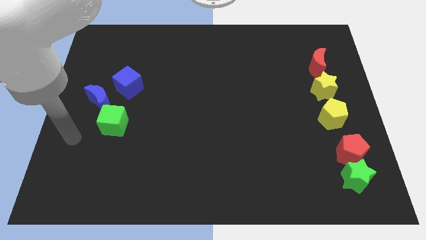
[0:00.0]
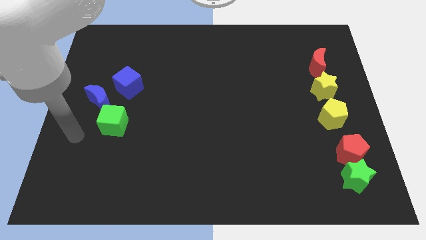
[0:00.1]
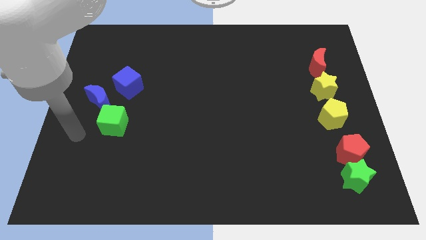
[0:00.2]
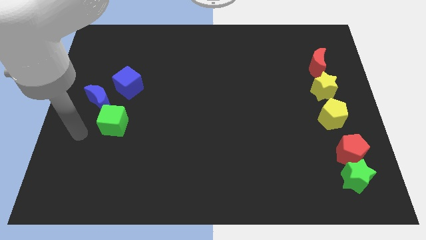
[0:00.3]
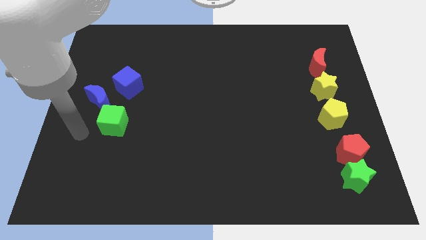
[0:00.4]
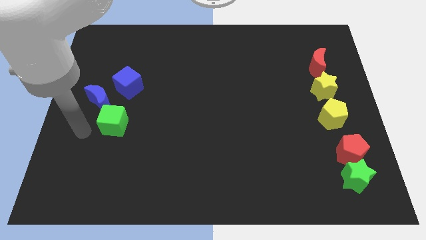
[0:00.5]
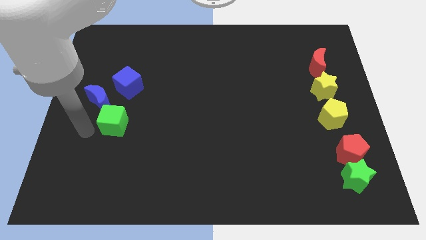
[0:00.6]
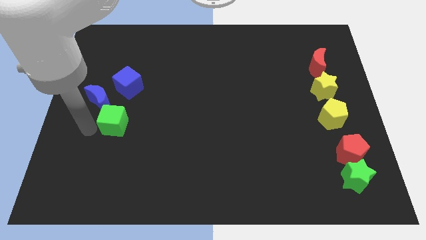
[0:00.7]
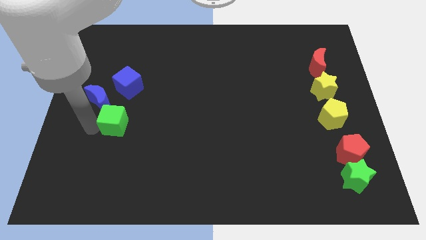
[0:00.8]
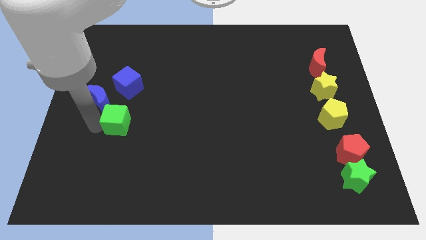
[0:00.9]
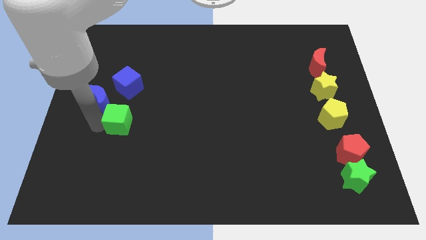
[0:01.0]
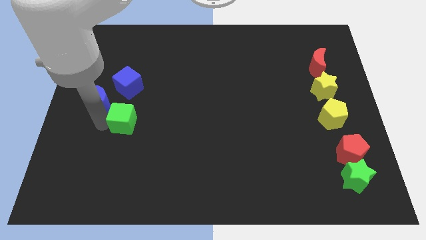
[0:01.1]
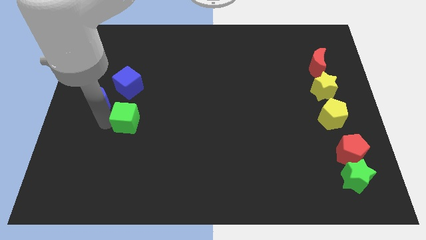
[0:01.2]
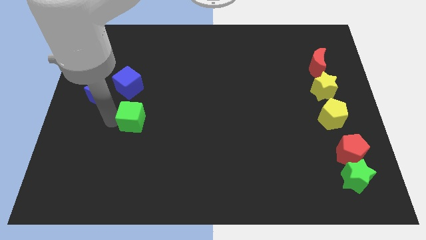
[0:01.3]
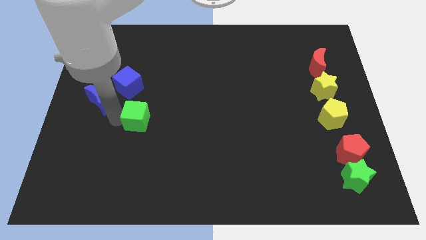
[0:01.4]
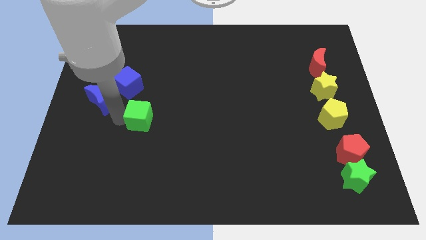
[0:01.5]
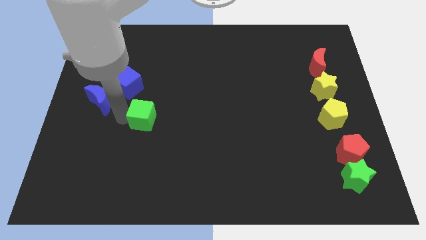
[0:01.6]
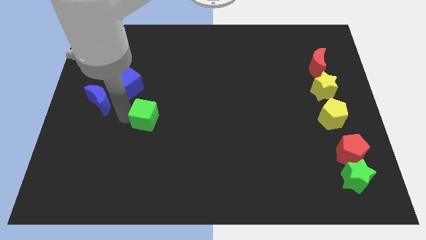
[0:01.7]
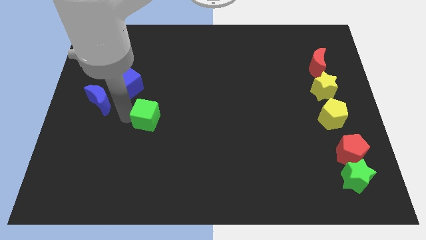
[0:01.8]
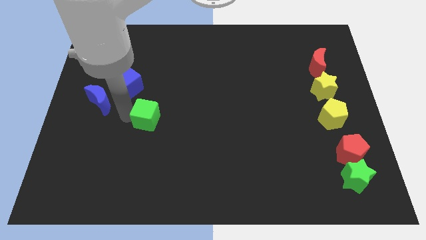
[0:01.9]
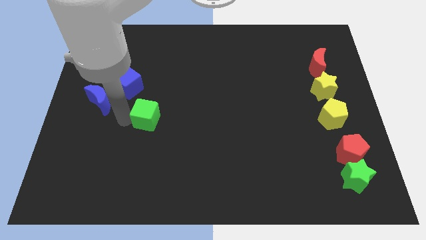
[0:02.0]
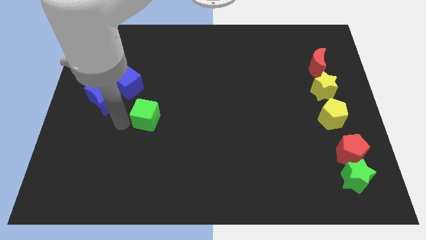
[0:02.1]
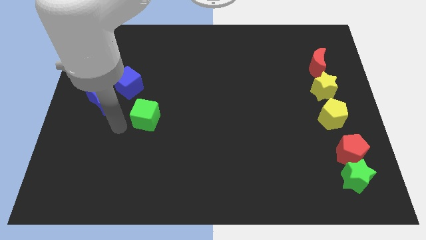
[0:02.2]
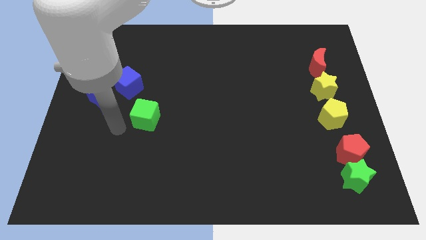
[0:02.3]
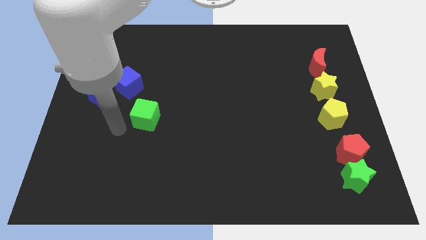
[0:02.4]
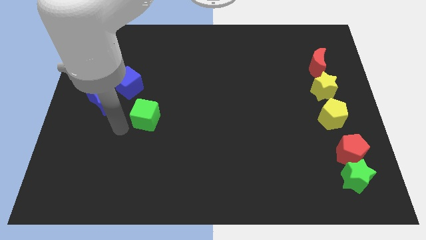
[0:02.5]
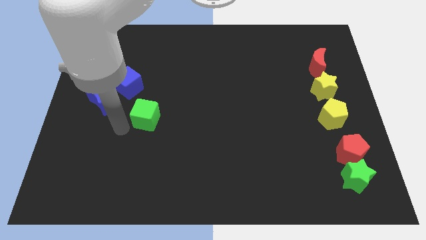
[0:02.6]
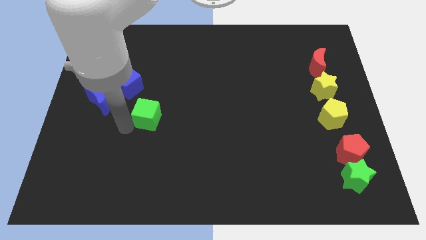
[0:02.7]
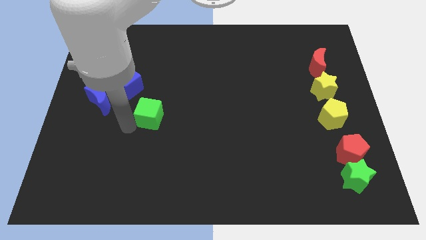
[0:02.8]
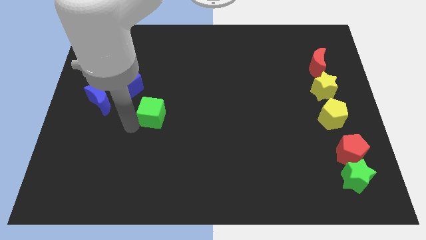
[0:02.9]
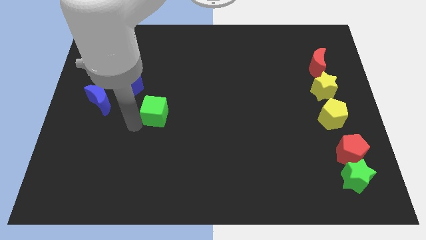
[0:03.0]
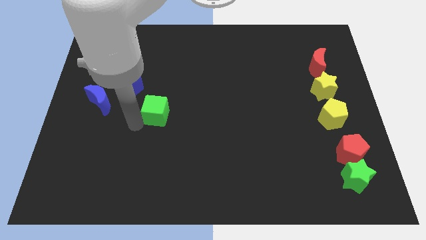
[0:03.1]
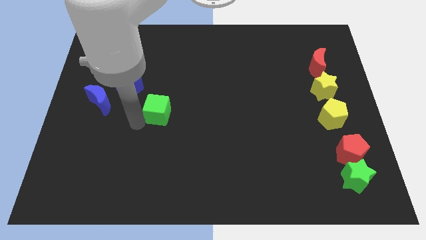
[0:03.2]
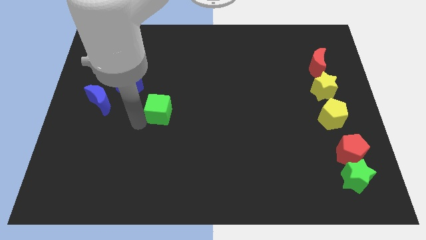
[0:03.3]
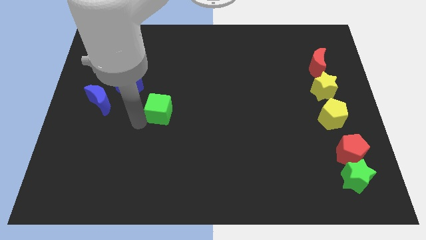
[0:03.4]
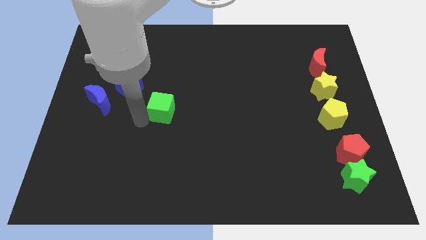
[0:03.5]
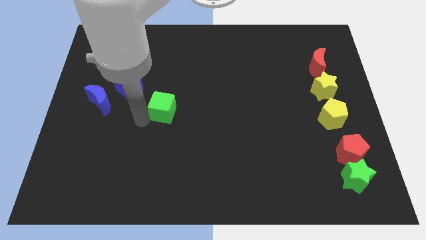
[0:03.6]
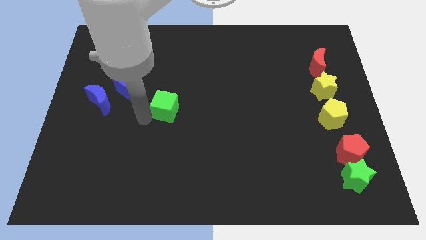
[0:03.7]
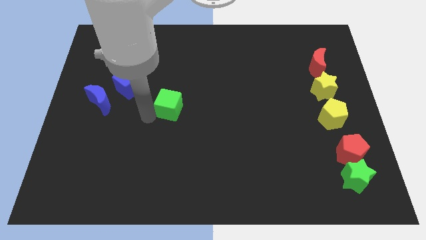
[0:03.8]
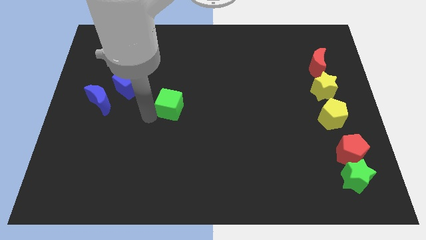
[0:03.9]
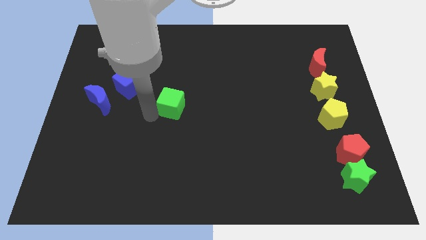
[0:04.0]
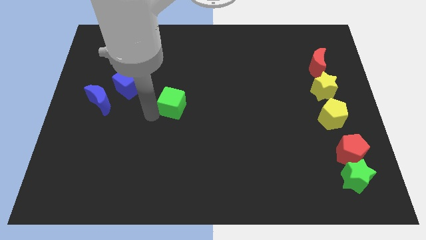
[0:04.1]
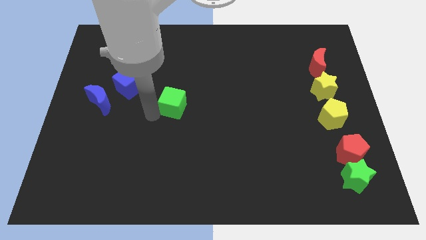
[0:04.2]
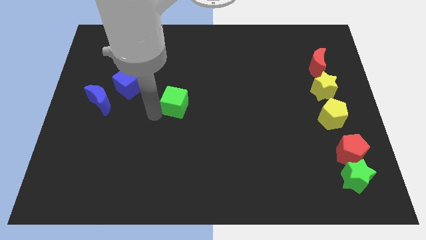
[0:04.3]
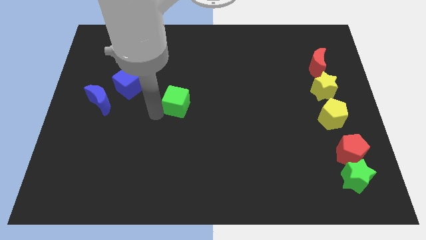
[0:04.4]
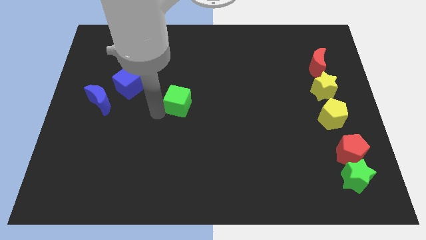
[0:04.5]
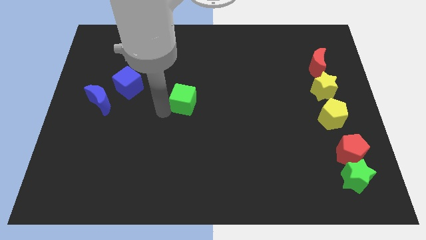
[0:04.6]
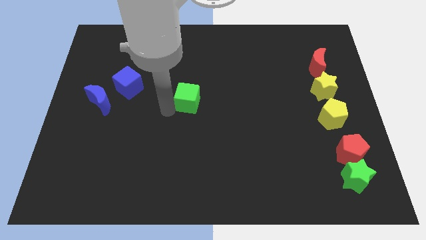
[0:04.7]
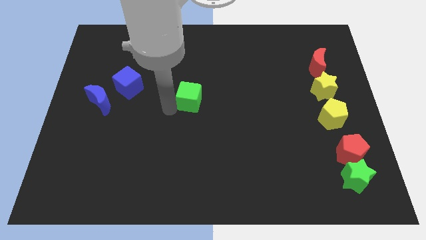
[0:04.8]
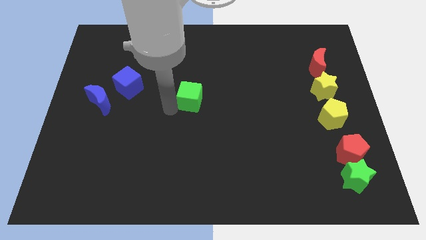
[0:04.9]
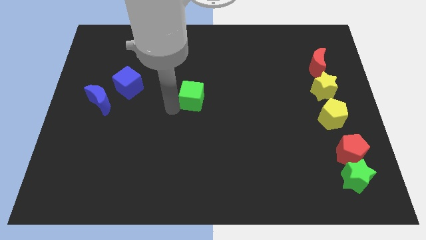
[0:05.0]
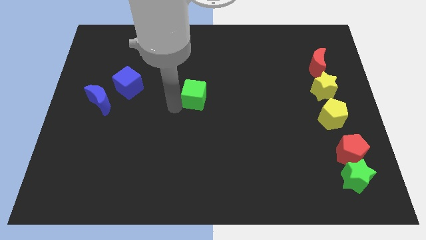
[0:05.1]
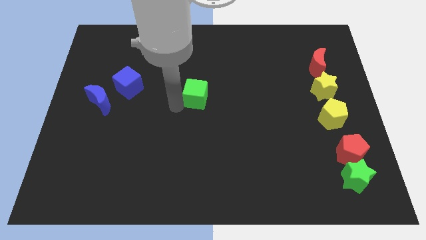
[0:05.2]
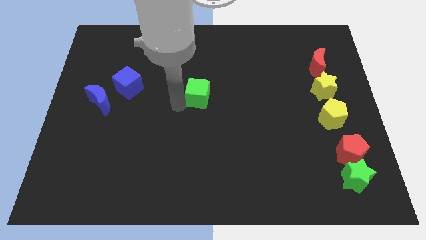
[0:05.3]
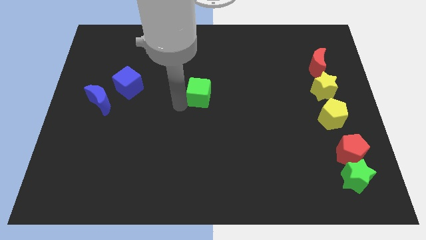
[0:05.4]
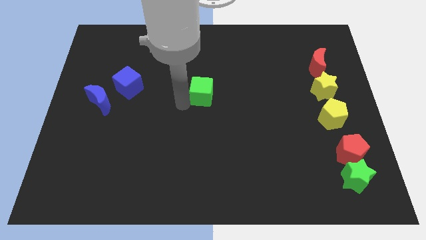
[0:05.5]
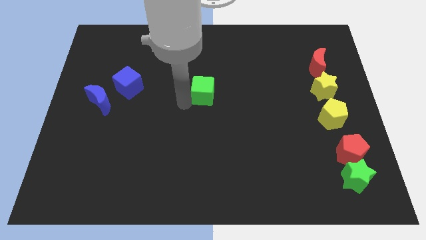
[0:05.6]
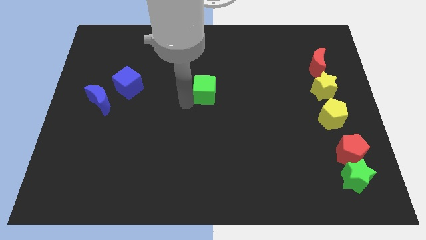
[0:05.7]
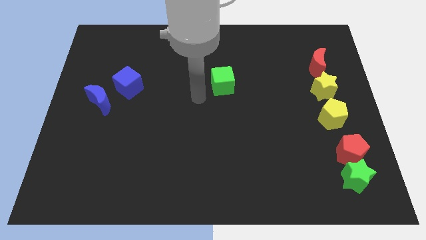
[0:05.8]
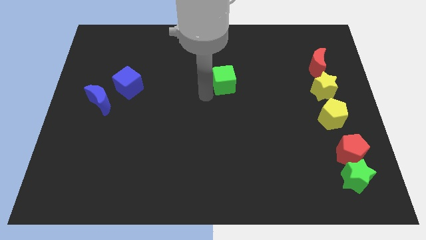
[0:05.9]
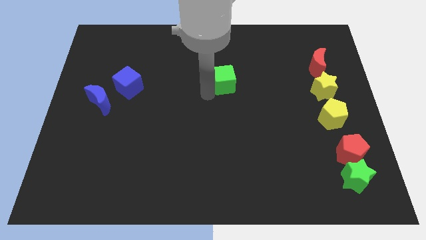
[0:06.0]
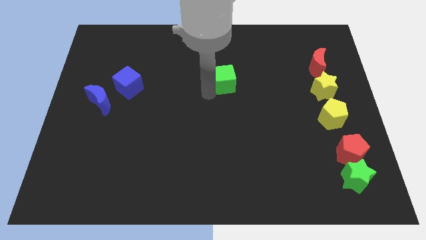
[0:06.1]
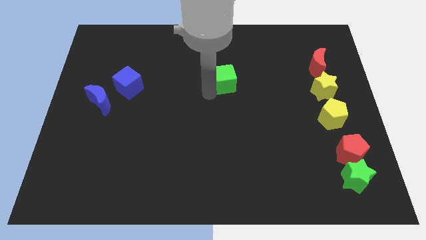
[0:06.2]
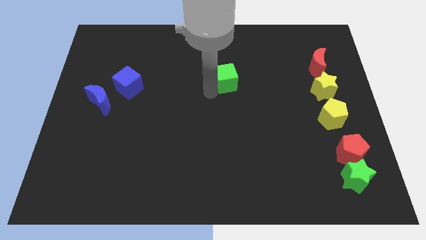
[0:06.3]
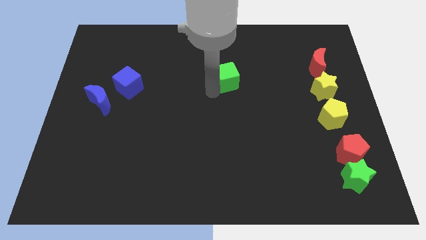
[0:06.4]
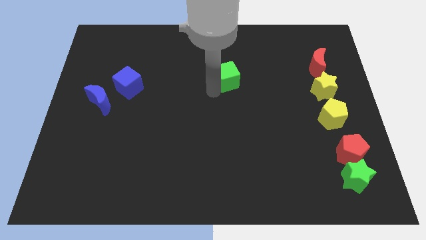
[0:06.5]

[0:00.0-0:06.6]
move the green cube towards the top right of the board

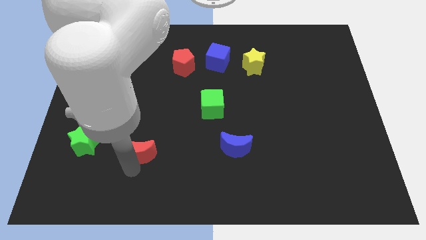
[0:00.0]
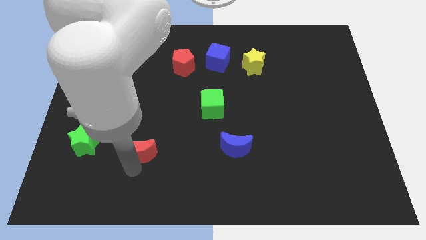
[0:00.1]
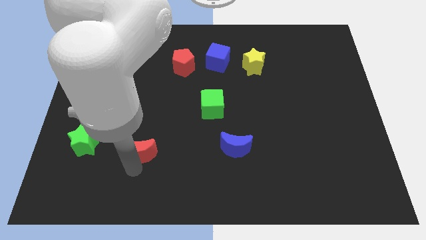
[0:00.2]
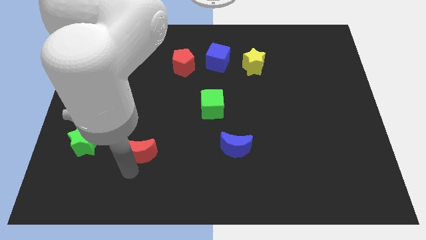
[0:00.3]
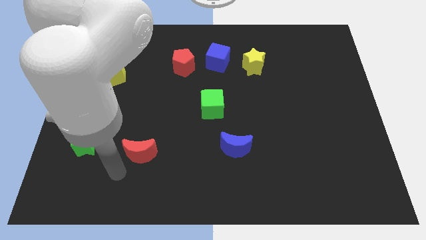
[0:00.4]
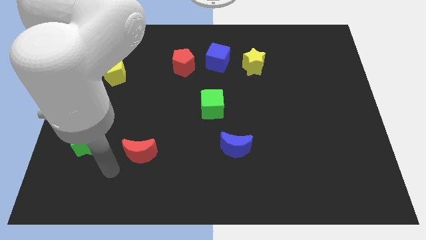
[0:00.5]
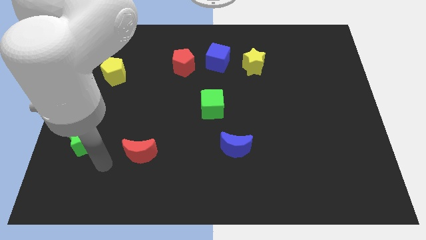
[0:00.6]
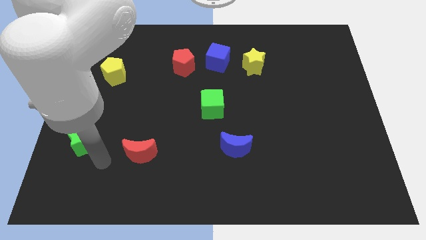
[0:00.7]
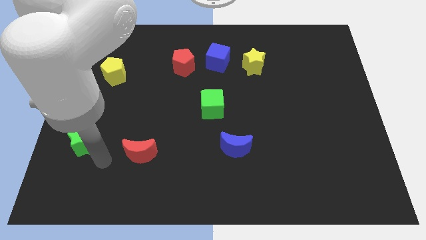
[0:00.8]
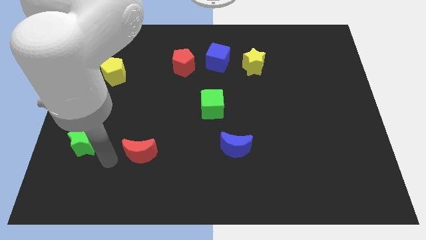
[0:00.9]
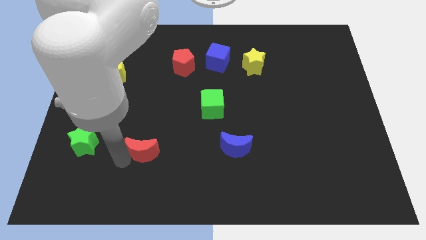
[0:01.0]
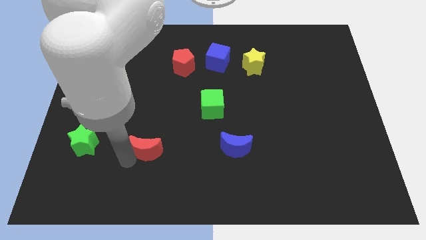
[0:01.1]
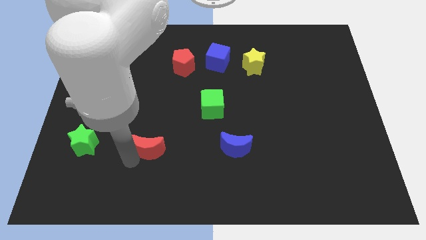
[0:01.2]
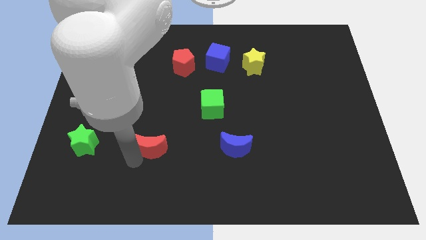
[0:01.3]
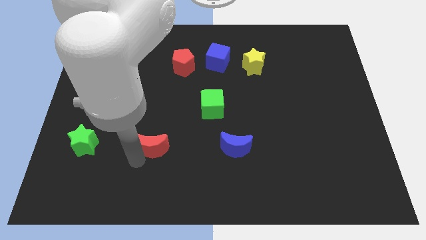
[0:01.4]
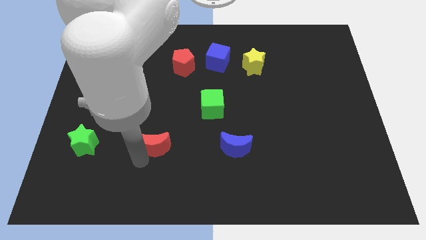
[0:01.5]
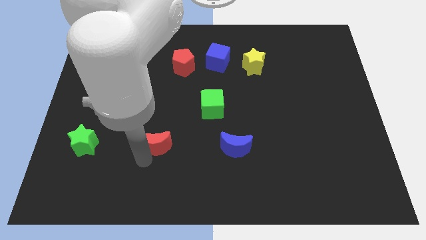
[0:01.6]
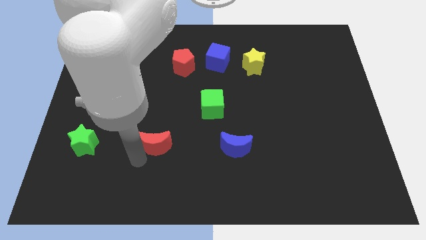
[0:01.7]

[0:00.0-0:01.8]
move red moon in between green star and blue crescent

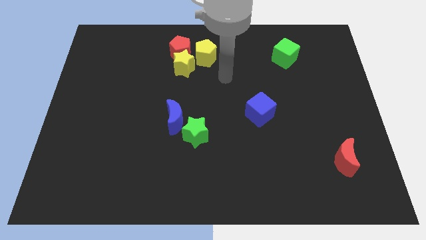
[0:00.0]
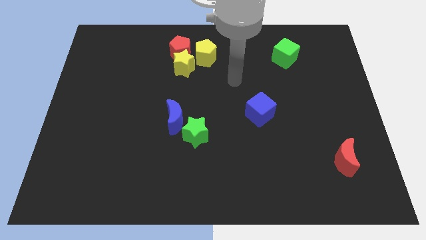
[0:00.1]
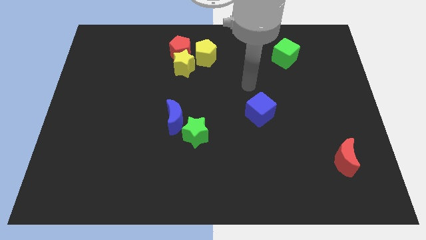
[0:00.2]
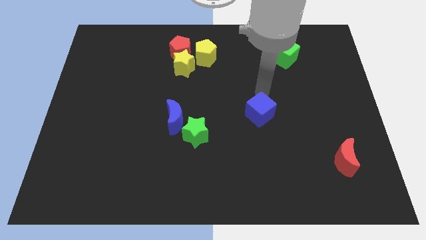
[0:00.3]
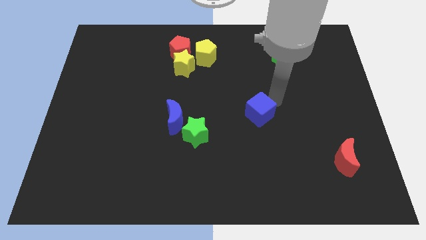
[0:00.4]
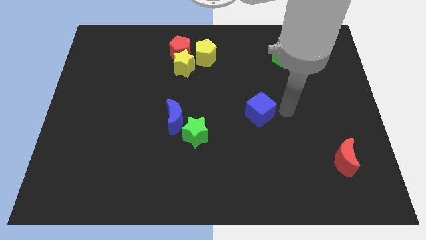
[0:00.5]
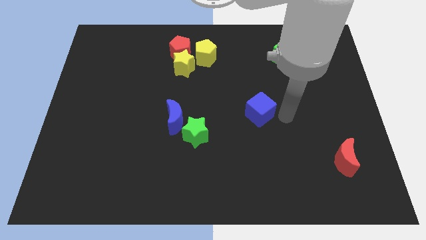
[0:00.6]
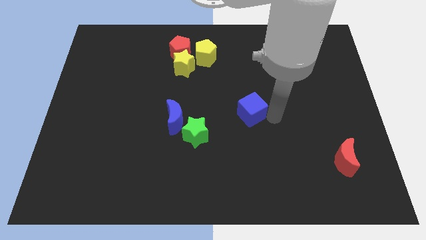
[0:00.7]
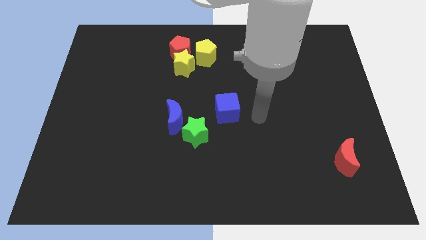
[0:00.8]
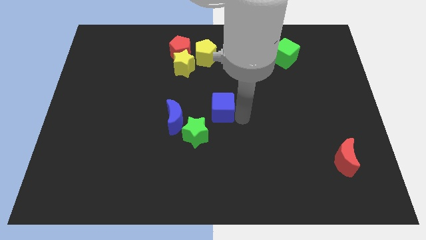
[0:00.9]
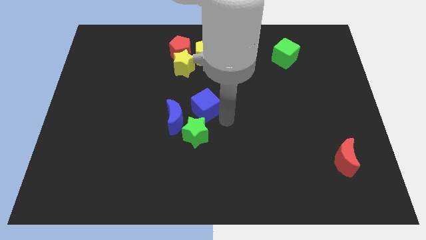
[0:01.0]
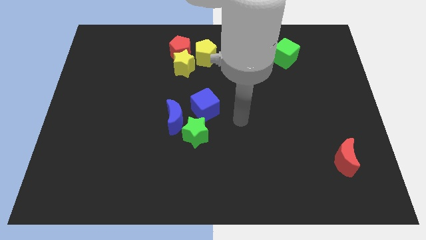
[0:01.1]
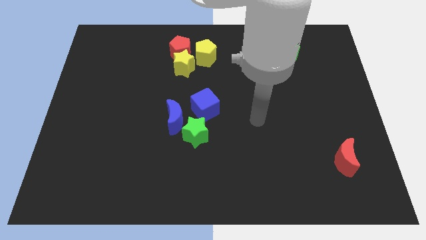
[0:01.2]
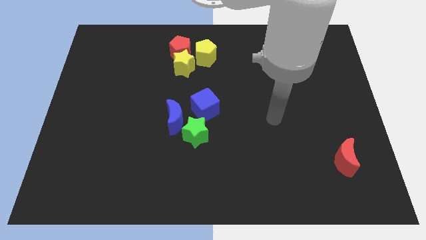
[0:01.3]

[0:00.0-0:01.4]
adjust the blue cube to the top right of the green star
